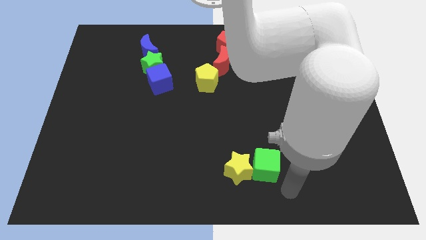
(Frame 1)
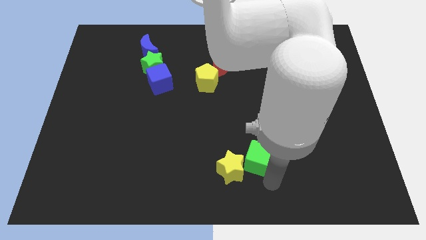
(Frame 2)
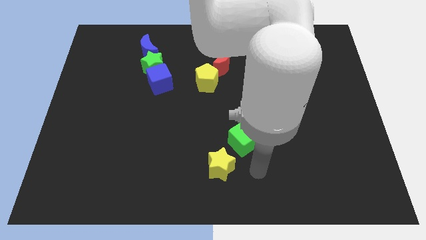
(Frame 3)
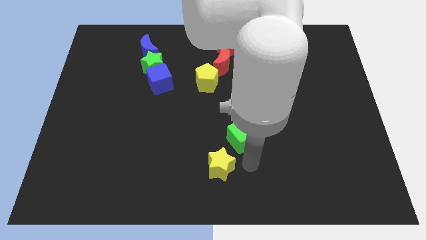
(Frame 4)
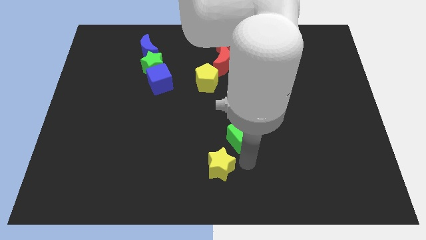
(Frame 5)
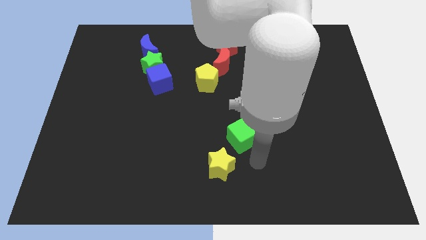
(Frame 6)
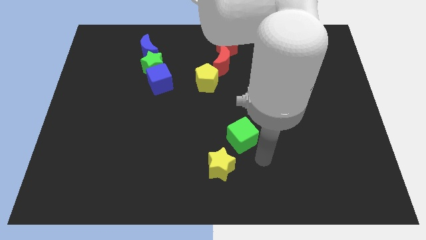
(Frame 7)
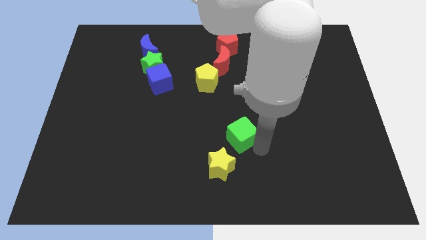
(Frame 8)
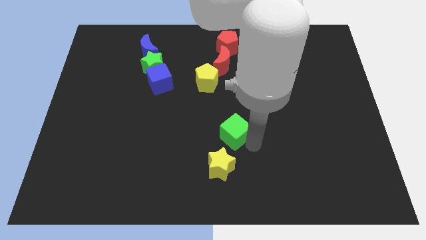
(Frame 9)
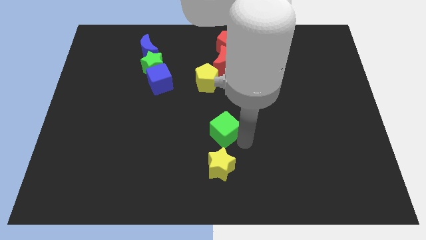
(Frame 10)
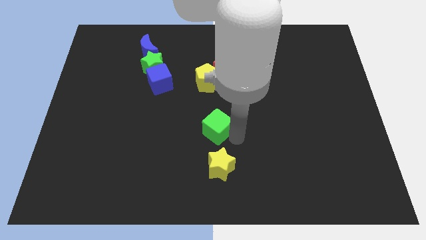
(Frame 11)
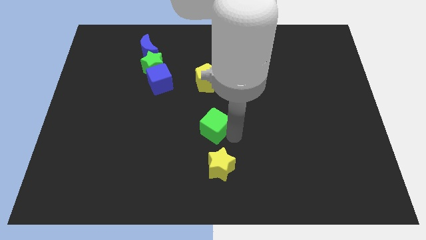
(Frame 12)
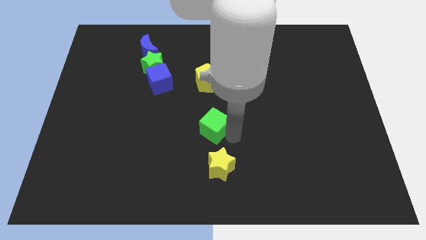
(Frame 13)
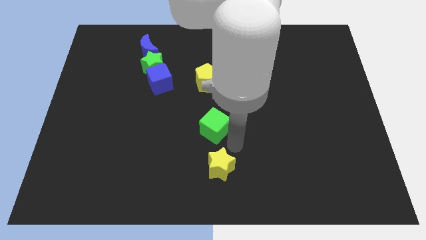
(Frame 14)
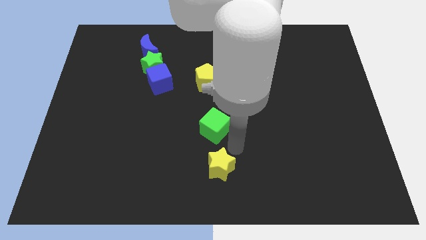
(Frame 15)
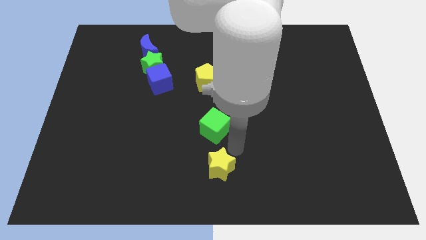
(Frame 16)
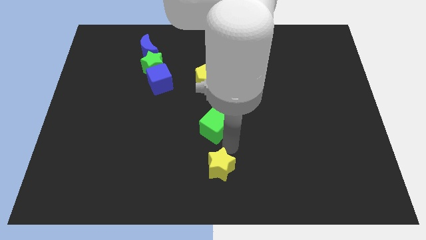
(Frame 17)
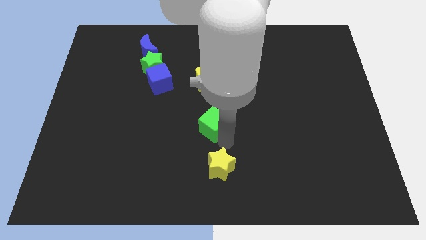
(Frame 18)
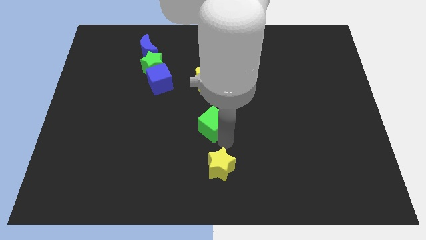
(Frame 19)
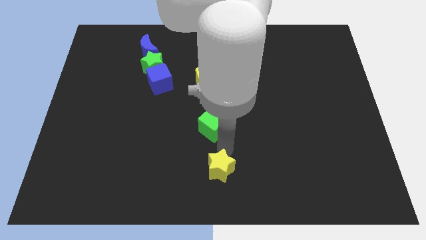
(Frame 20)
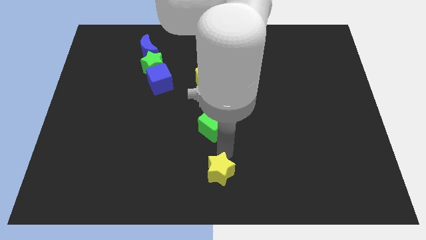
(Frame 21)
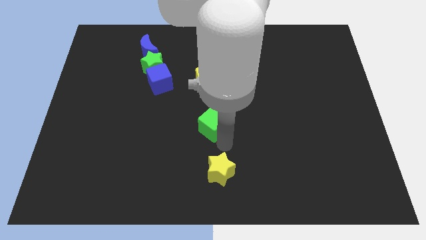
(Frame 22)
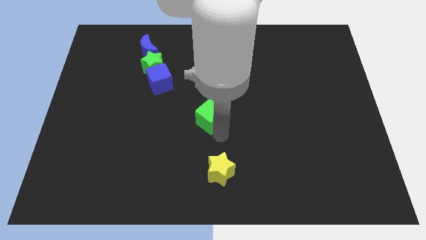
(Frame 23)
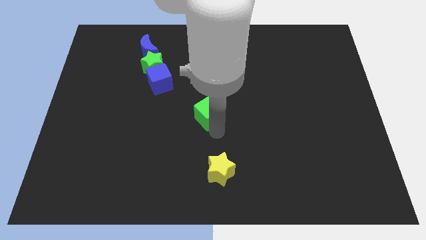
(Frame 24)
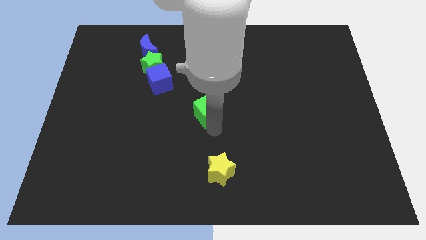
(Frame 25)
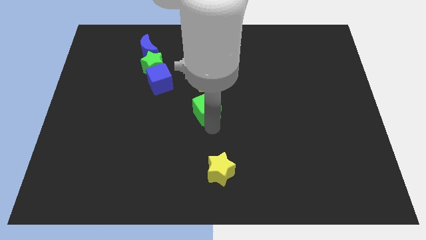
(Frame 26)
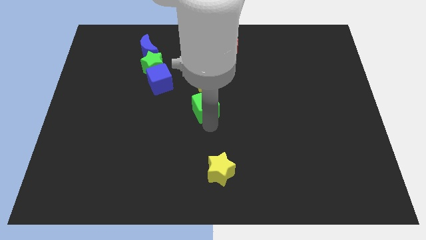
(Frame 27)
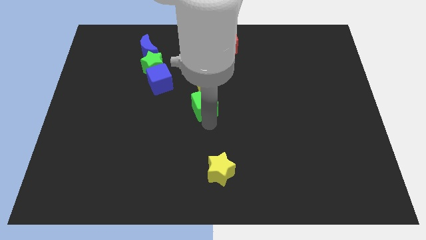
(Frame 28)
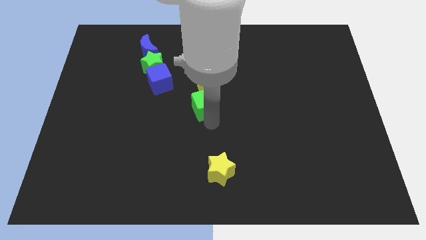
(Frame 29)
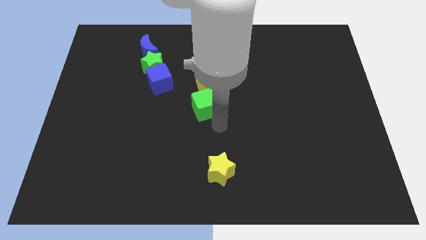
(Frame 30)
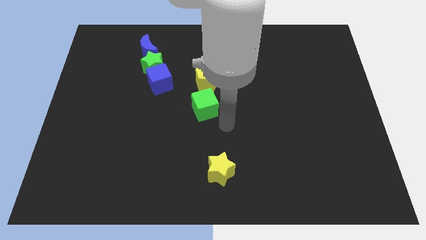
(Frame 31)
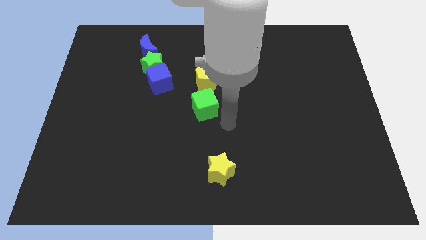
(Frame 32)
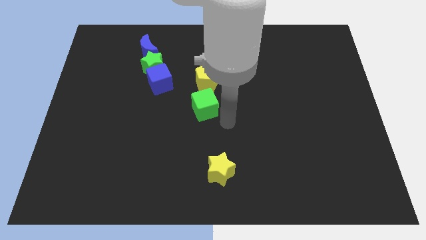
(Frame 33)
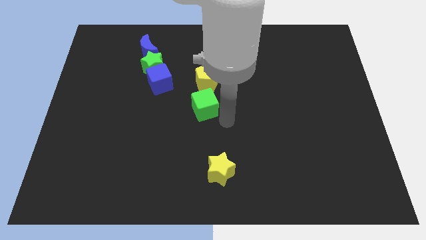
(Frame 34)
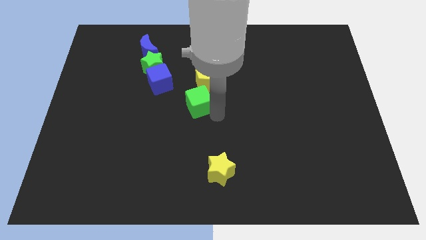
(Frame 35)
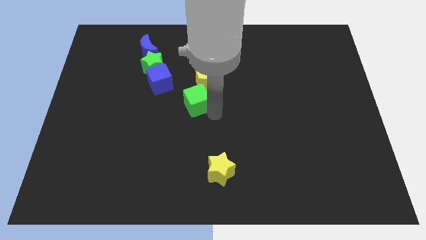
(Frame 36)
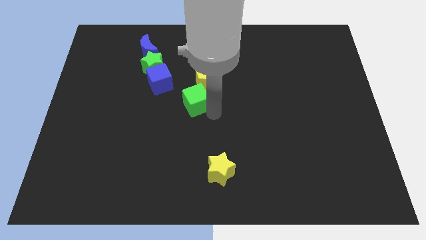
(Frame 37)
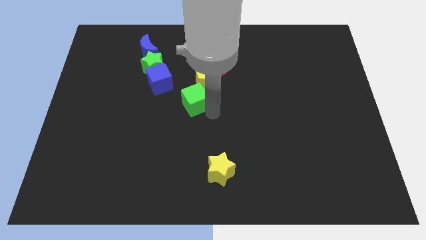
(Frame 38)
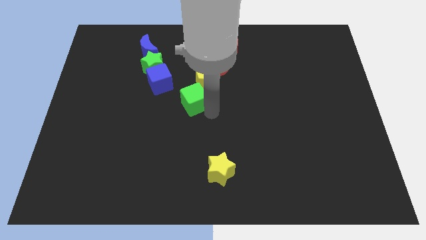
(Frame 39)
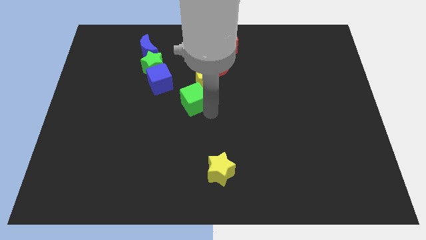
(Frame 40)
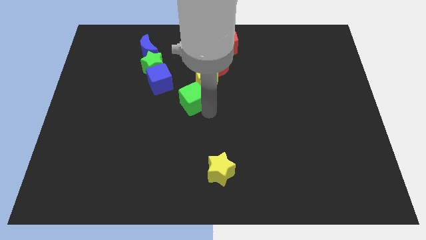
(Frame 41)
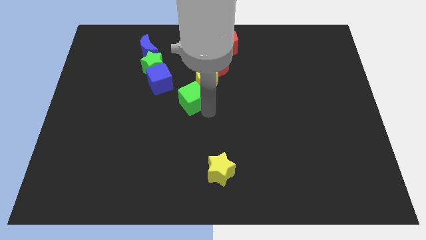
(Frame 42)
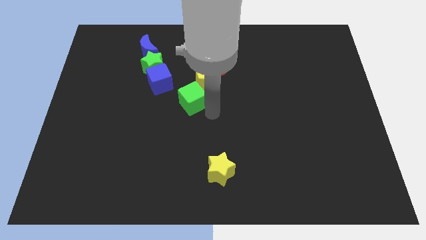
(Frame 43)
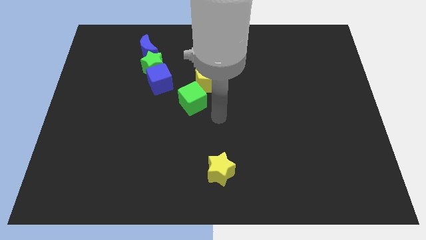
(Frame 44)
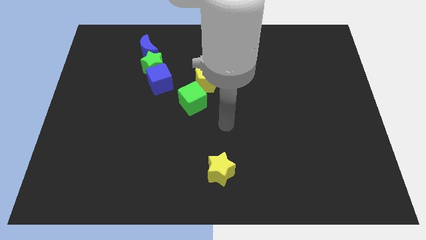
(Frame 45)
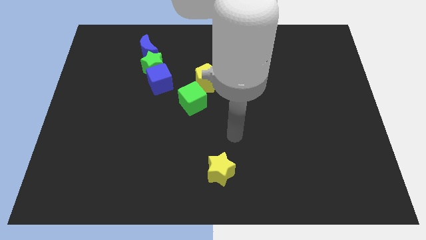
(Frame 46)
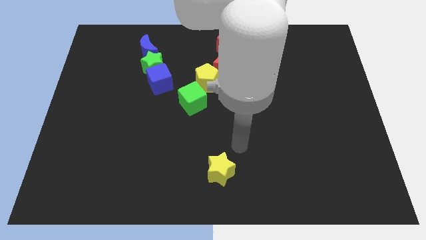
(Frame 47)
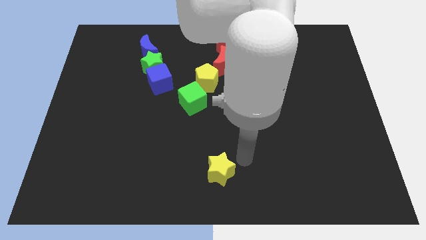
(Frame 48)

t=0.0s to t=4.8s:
push the green cube to the bottom right side of the blue cube

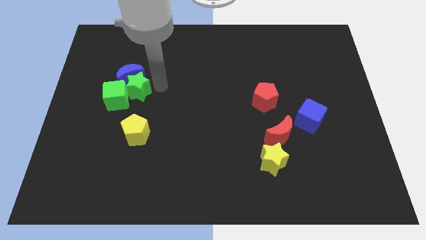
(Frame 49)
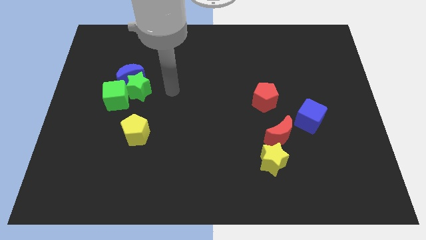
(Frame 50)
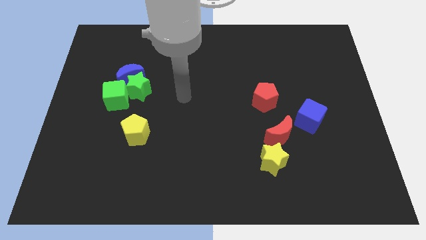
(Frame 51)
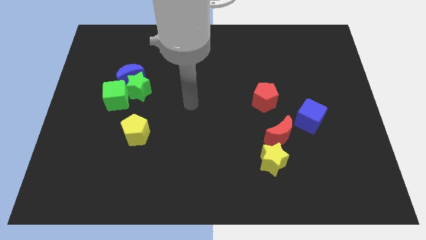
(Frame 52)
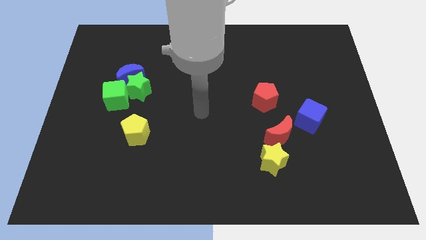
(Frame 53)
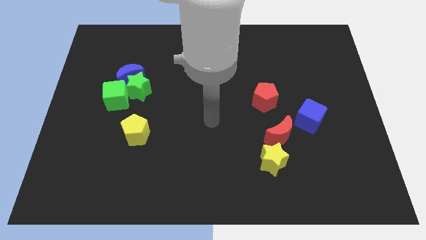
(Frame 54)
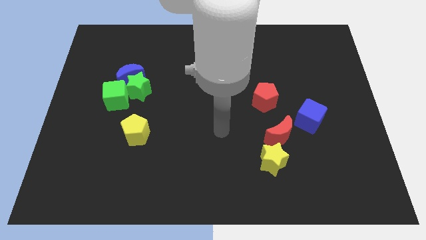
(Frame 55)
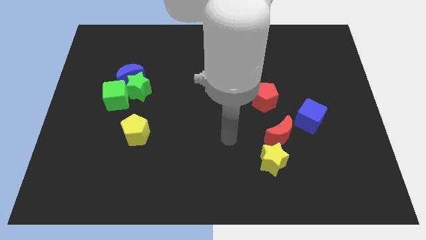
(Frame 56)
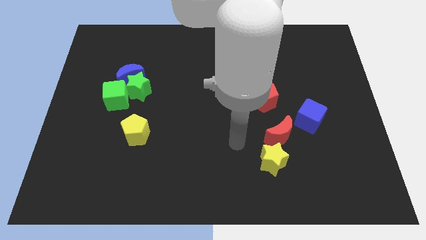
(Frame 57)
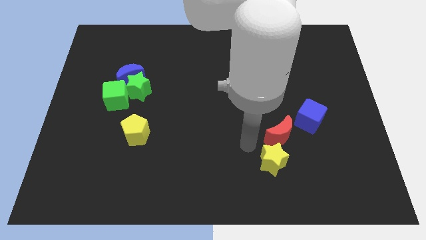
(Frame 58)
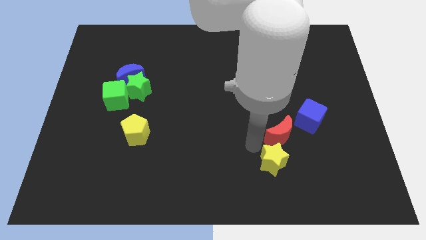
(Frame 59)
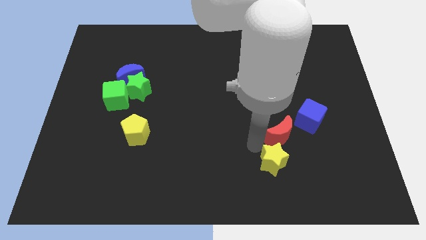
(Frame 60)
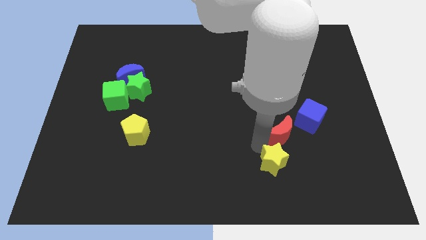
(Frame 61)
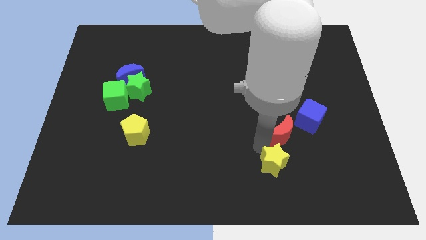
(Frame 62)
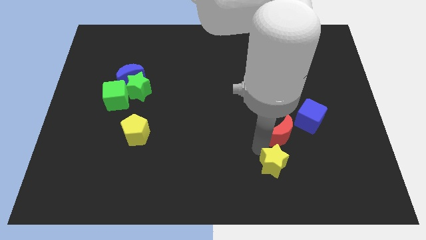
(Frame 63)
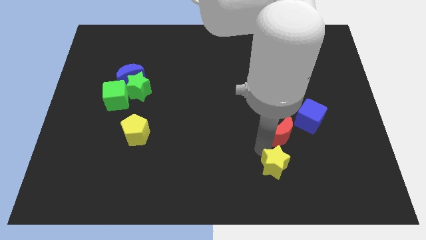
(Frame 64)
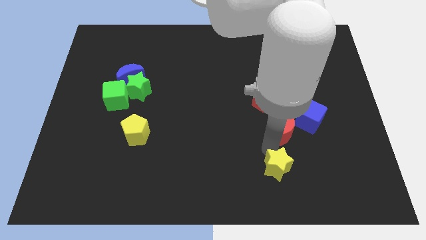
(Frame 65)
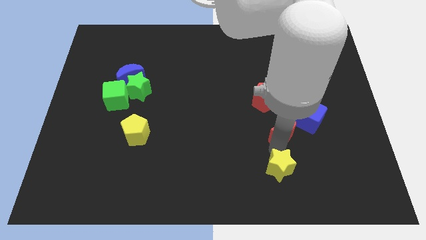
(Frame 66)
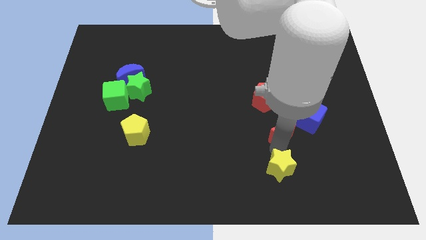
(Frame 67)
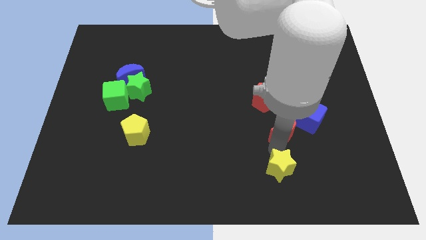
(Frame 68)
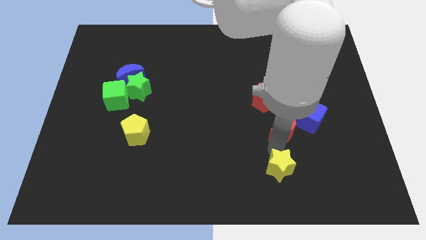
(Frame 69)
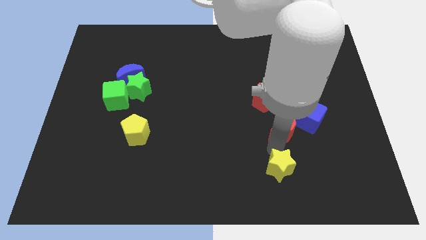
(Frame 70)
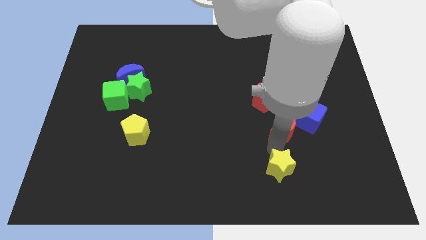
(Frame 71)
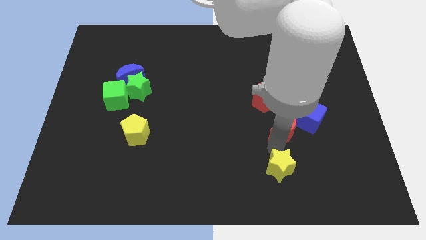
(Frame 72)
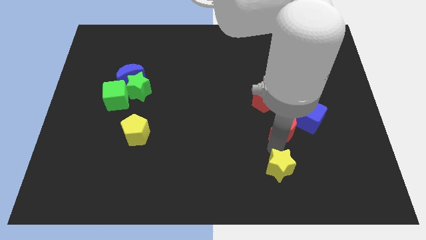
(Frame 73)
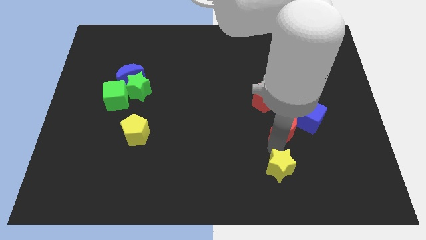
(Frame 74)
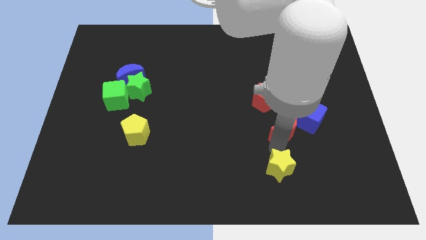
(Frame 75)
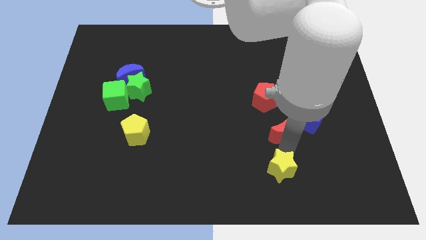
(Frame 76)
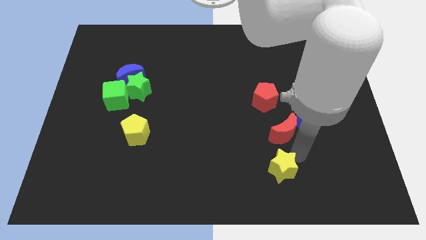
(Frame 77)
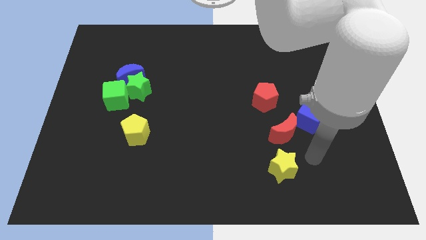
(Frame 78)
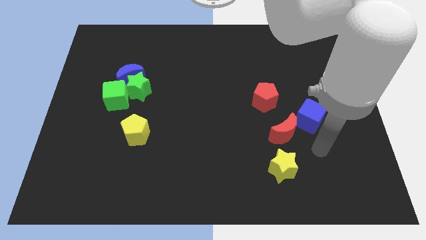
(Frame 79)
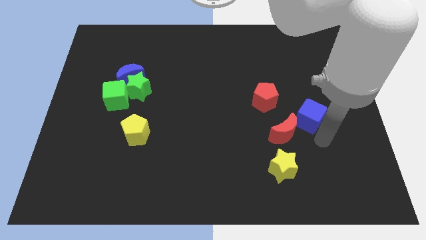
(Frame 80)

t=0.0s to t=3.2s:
separate the yellow star and the red crescent

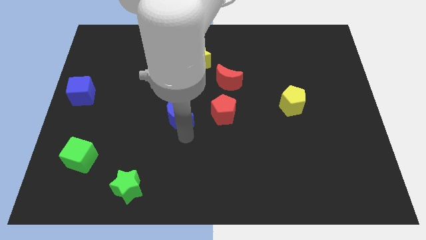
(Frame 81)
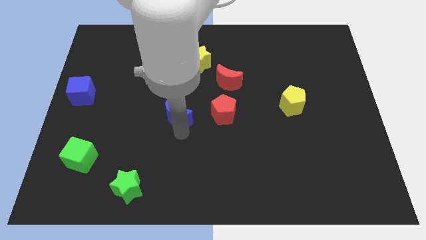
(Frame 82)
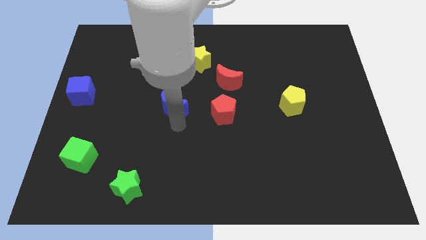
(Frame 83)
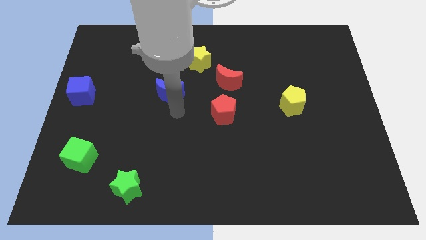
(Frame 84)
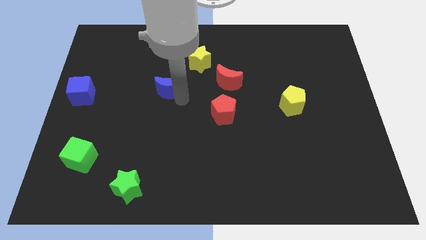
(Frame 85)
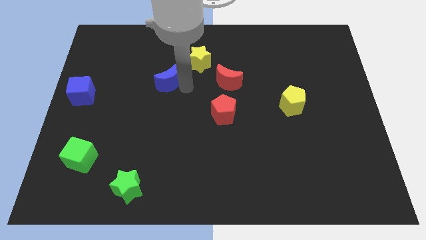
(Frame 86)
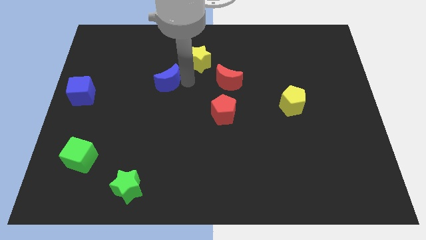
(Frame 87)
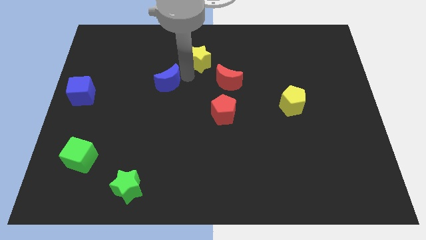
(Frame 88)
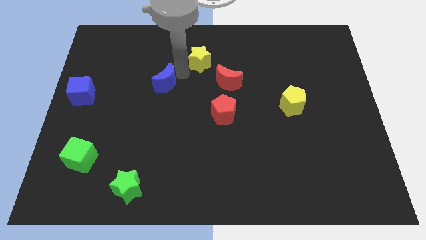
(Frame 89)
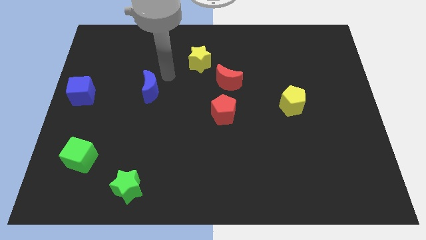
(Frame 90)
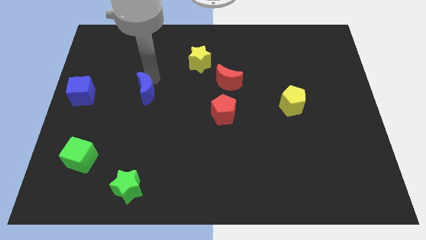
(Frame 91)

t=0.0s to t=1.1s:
push the blue crescent right side to the blue cube
